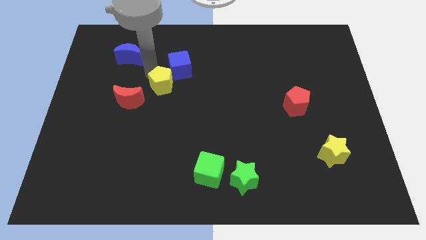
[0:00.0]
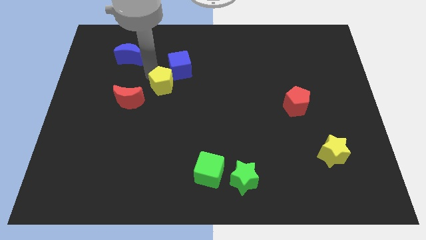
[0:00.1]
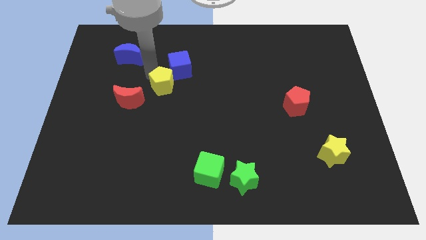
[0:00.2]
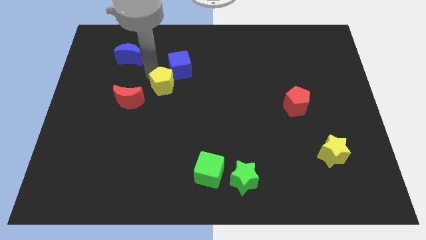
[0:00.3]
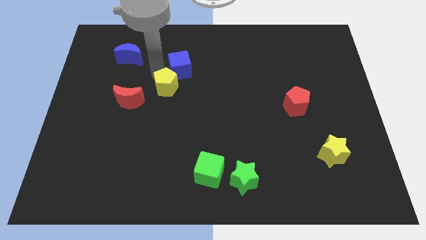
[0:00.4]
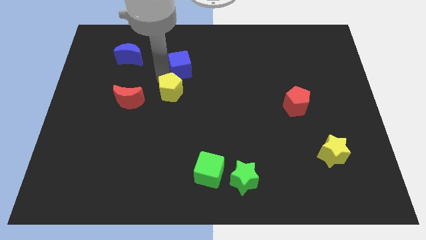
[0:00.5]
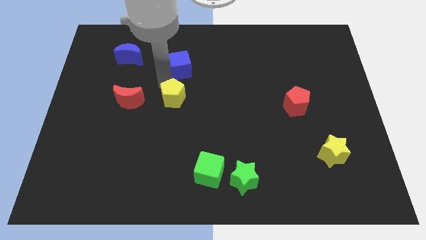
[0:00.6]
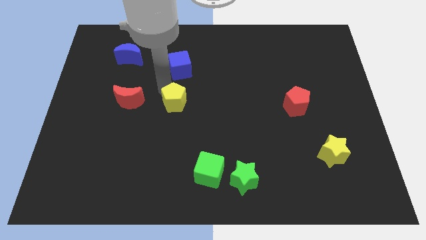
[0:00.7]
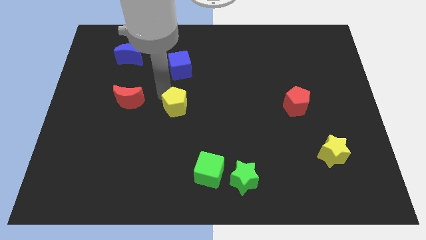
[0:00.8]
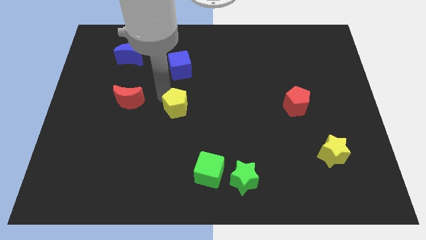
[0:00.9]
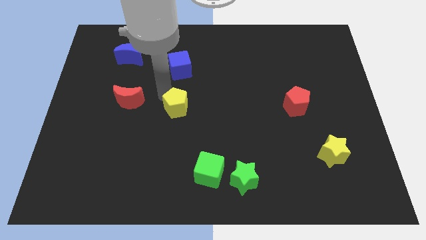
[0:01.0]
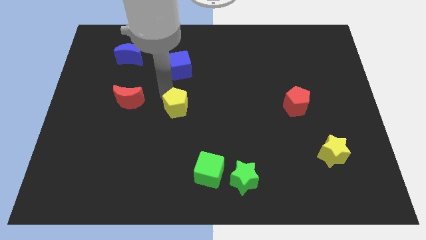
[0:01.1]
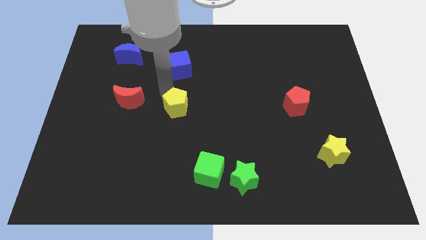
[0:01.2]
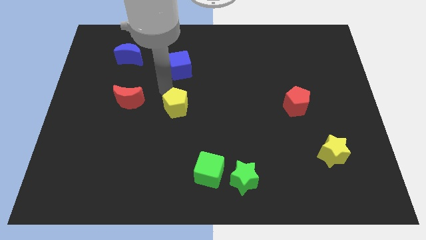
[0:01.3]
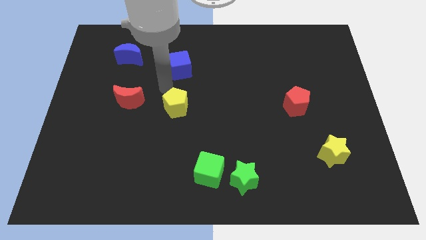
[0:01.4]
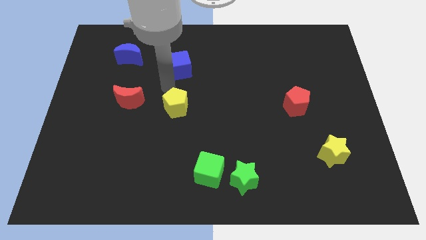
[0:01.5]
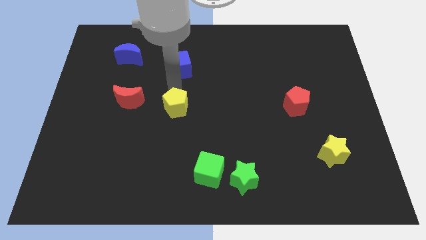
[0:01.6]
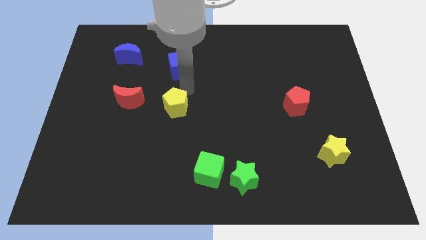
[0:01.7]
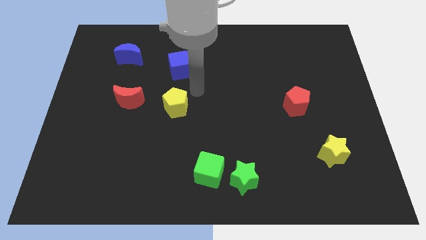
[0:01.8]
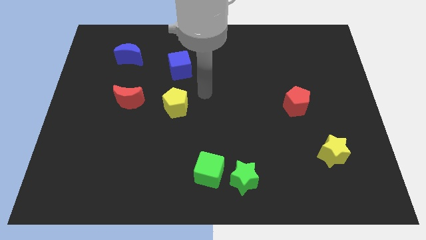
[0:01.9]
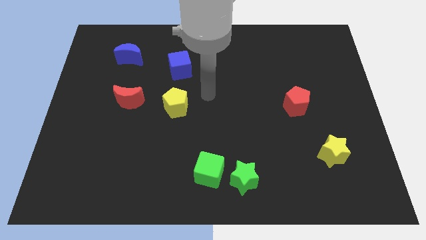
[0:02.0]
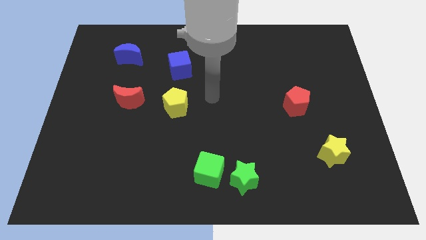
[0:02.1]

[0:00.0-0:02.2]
move the yellow pentagon right to the red moon

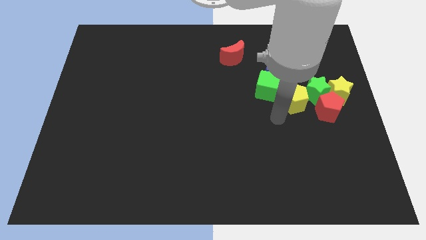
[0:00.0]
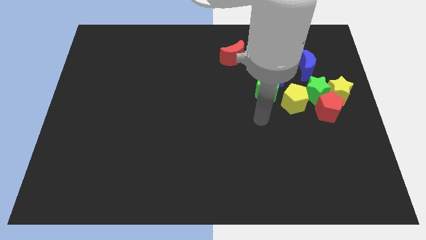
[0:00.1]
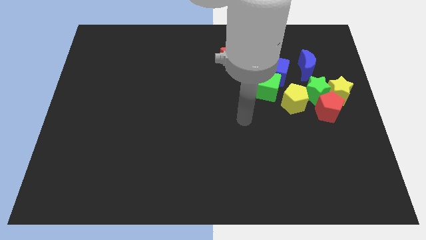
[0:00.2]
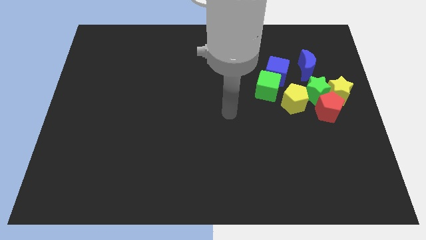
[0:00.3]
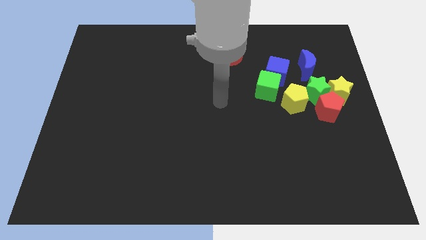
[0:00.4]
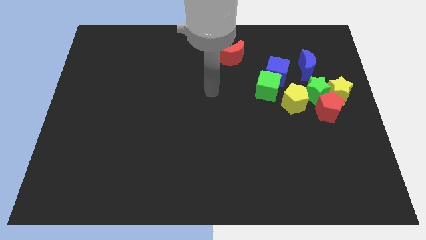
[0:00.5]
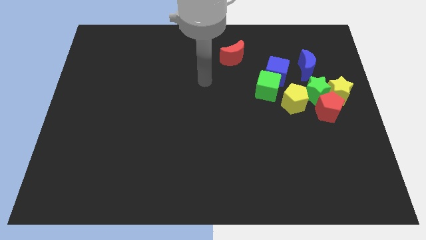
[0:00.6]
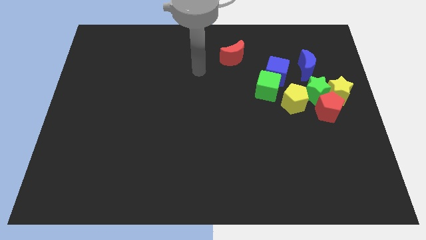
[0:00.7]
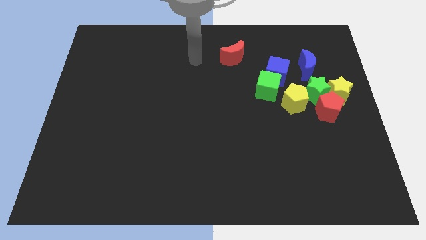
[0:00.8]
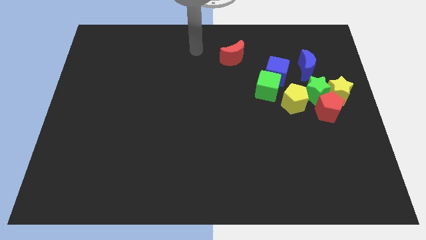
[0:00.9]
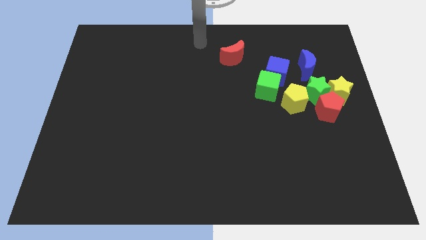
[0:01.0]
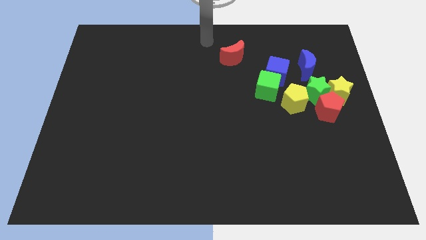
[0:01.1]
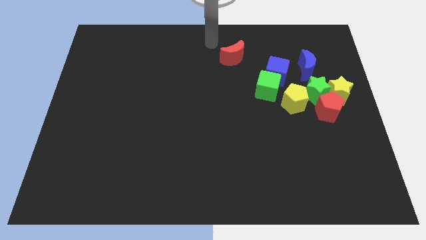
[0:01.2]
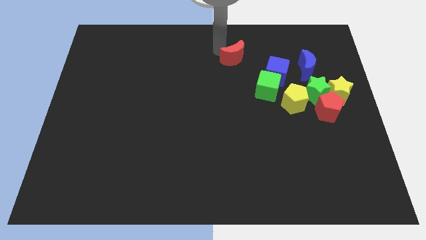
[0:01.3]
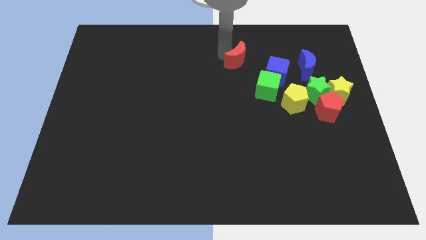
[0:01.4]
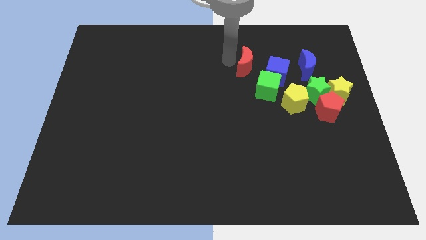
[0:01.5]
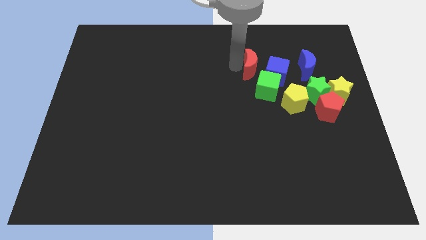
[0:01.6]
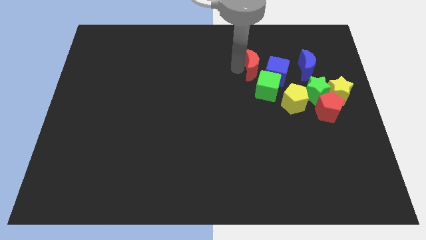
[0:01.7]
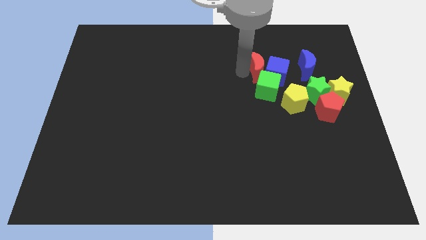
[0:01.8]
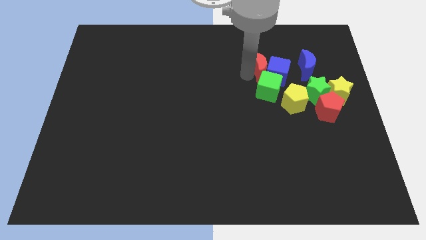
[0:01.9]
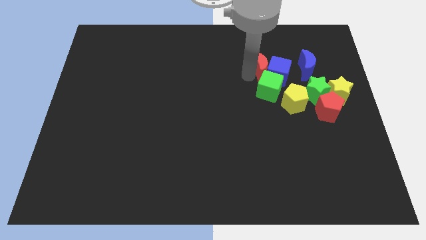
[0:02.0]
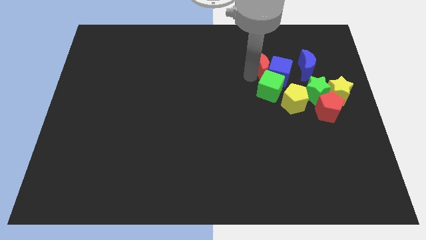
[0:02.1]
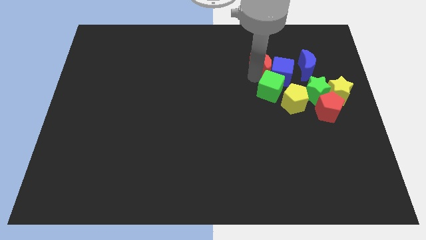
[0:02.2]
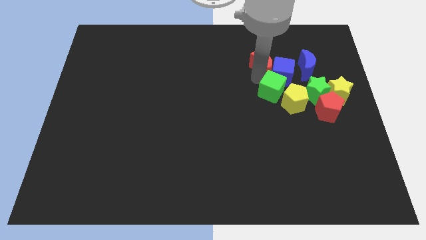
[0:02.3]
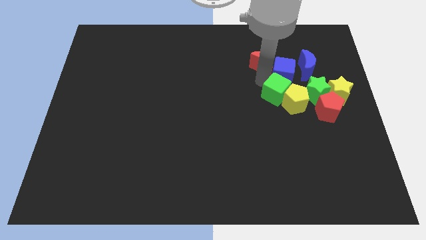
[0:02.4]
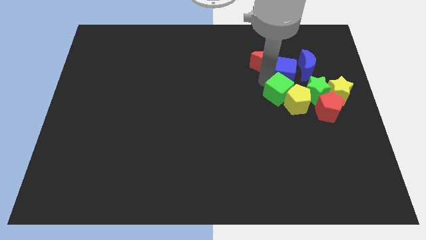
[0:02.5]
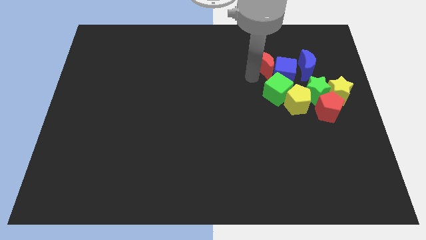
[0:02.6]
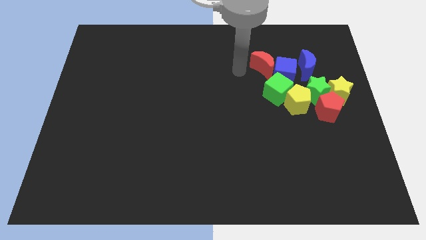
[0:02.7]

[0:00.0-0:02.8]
push the red moon into the blue cube

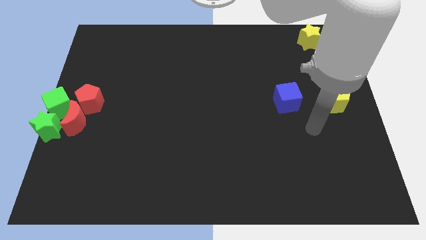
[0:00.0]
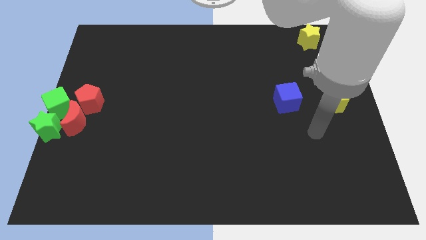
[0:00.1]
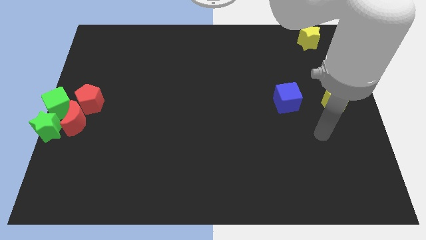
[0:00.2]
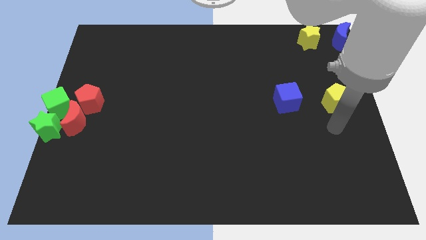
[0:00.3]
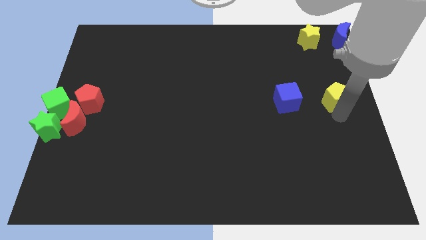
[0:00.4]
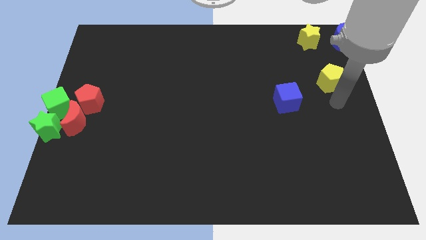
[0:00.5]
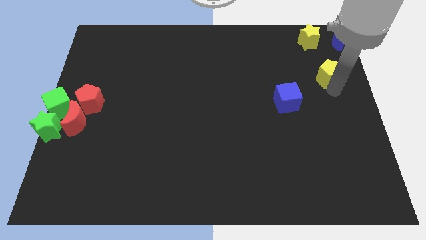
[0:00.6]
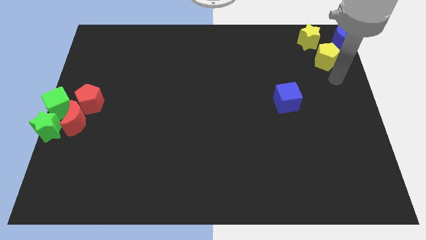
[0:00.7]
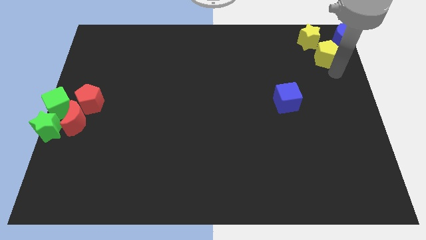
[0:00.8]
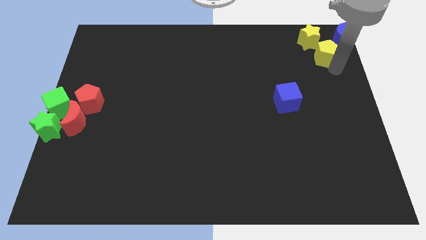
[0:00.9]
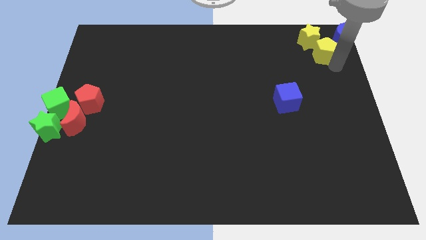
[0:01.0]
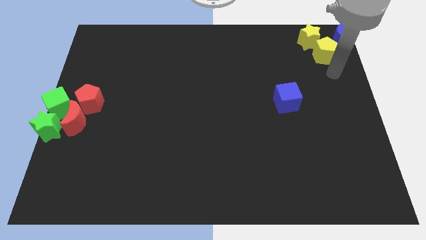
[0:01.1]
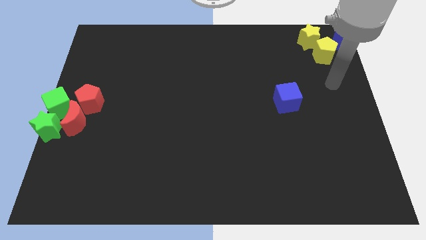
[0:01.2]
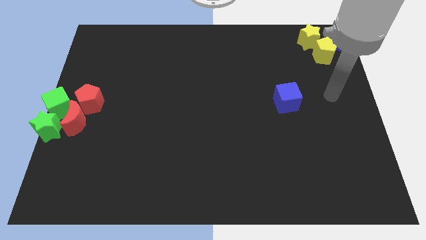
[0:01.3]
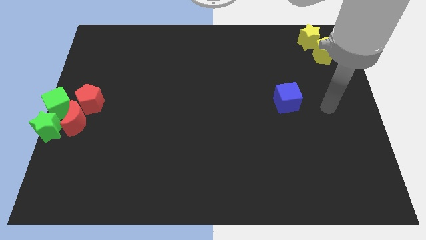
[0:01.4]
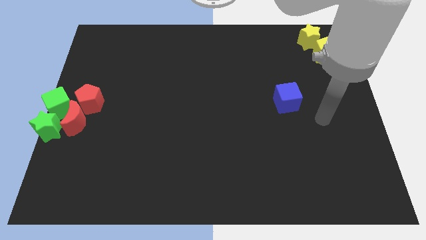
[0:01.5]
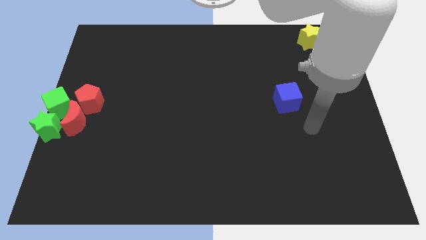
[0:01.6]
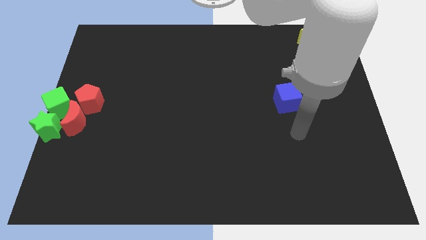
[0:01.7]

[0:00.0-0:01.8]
push the yellow pentagon to the bottom right of the yellow star

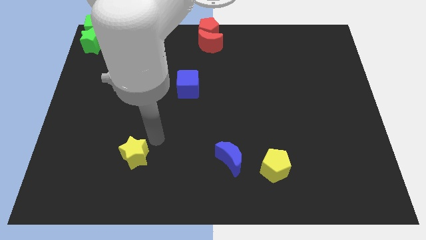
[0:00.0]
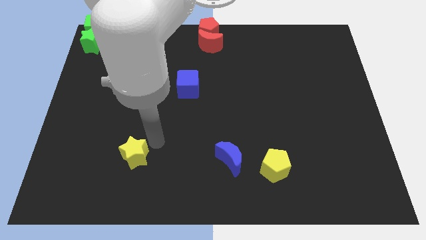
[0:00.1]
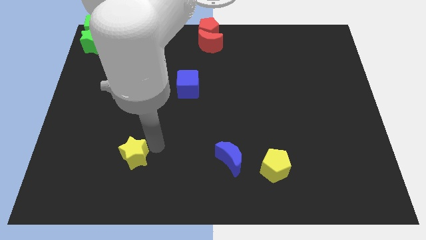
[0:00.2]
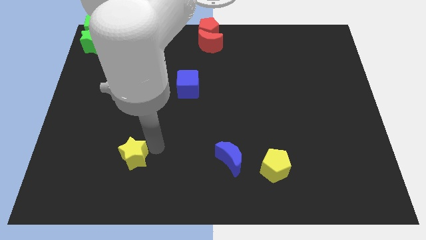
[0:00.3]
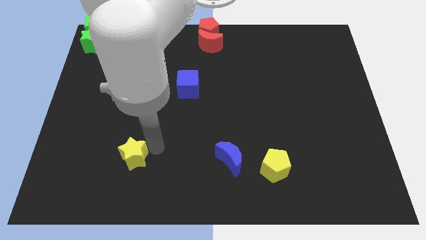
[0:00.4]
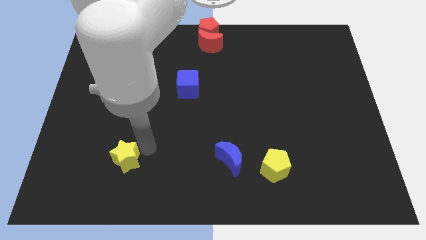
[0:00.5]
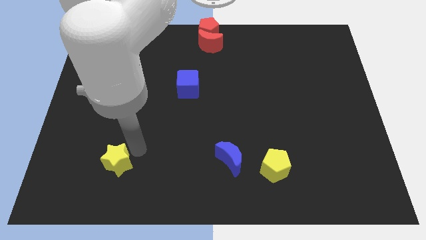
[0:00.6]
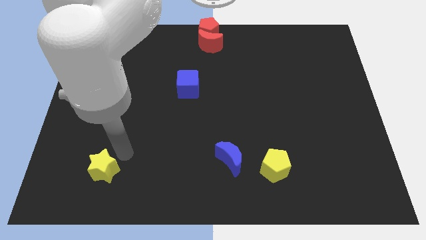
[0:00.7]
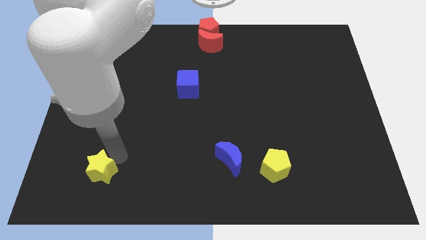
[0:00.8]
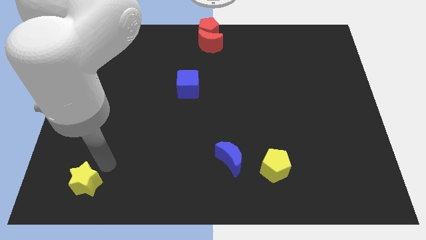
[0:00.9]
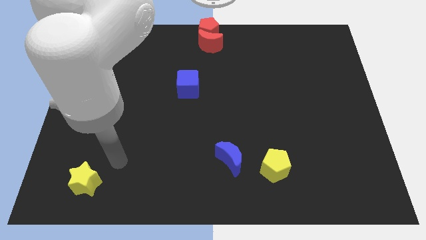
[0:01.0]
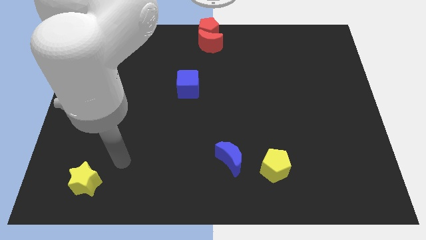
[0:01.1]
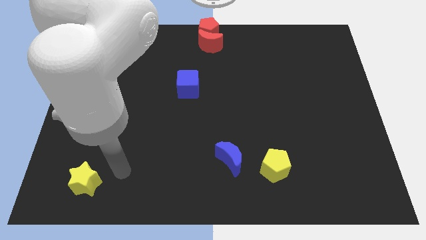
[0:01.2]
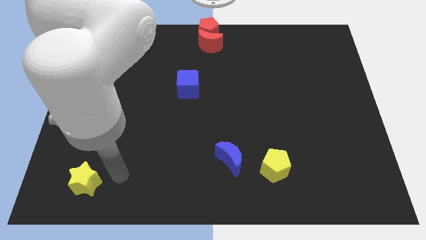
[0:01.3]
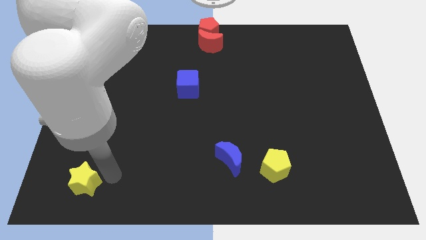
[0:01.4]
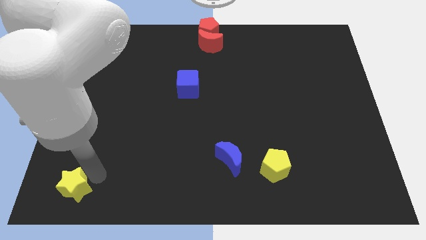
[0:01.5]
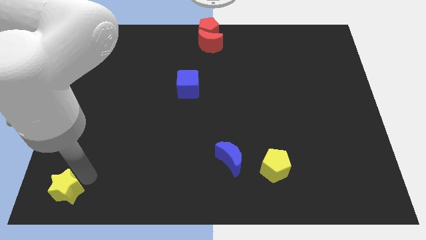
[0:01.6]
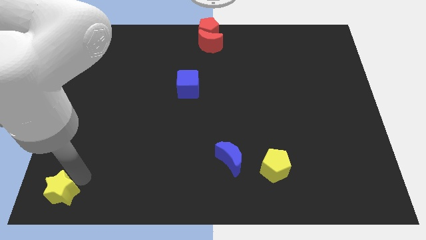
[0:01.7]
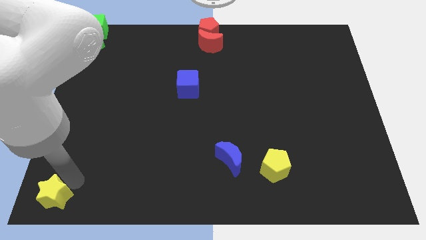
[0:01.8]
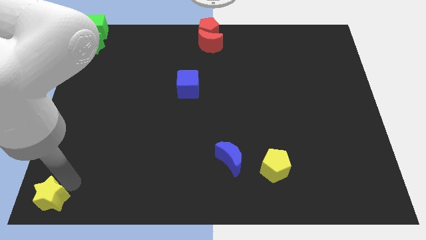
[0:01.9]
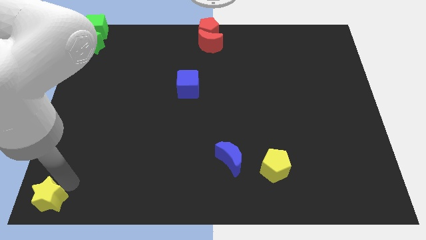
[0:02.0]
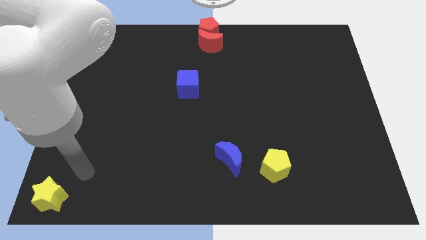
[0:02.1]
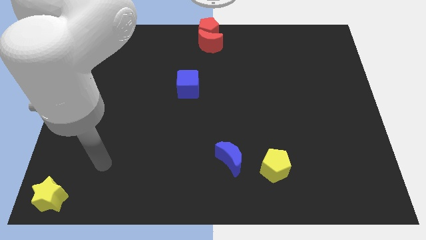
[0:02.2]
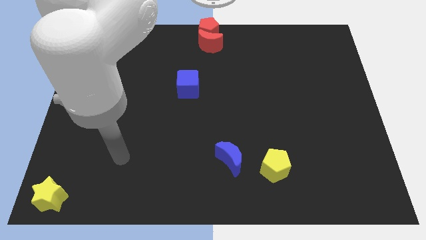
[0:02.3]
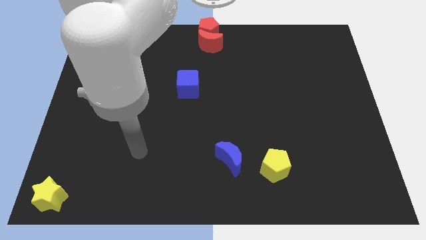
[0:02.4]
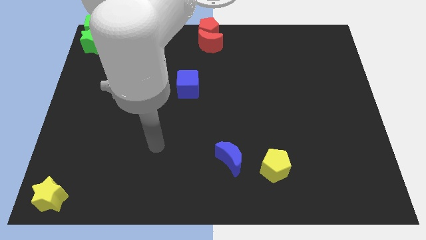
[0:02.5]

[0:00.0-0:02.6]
move the yellow star to the bottom left of the board
